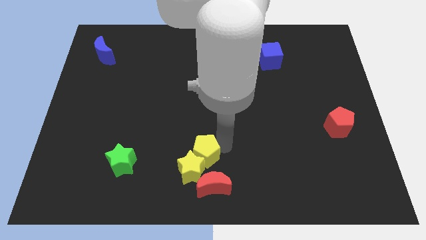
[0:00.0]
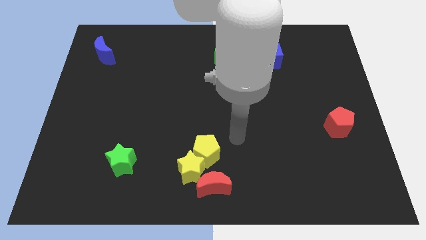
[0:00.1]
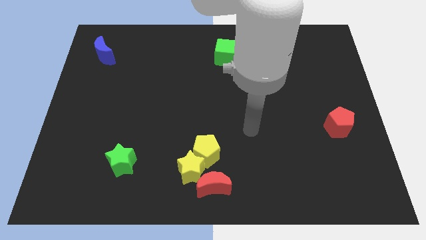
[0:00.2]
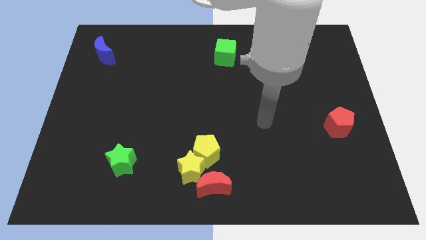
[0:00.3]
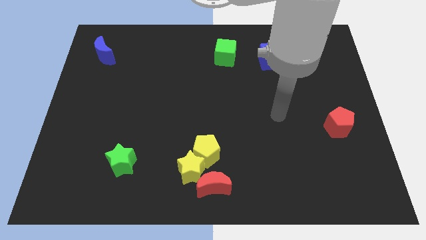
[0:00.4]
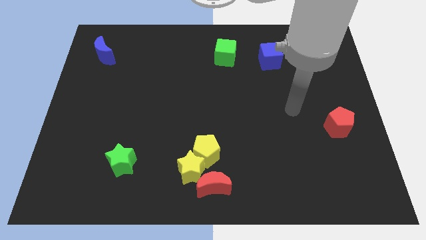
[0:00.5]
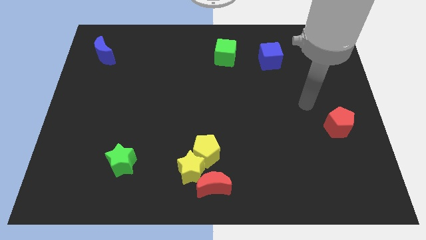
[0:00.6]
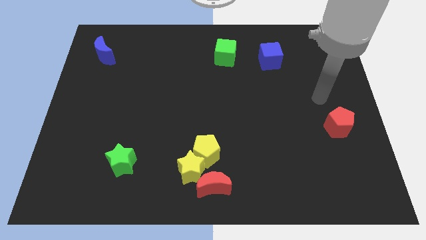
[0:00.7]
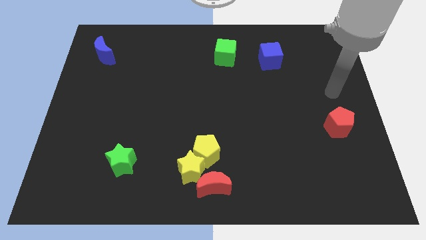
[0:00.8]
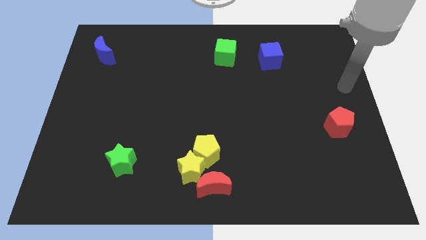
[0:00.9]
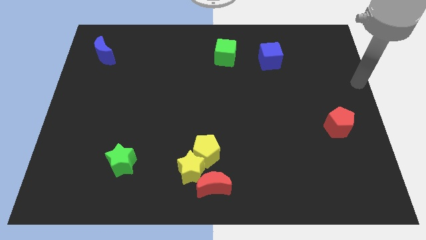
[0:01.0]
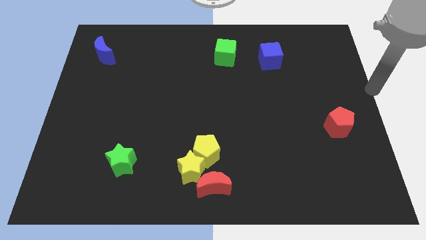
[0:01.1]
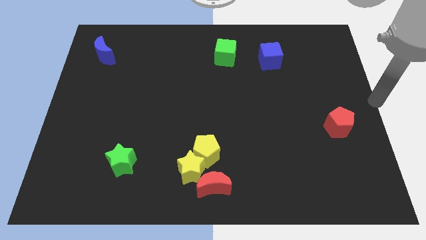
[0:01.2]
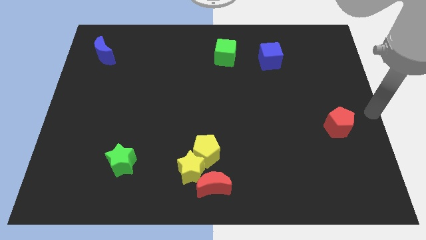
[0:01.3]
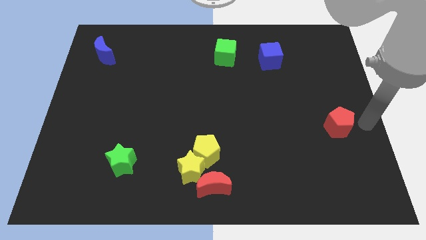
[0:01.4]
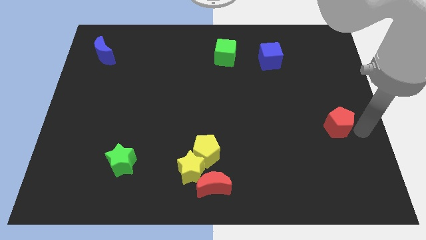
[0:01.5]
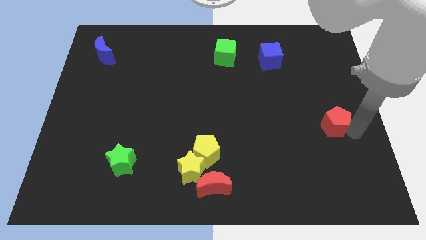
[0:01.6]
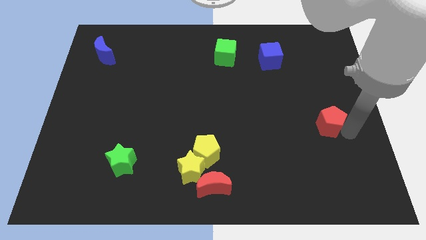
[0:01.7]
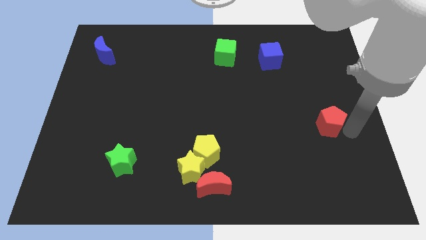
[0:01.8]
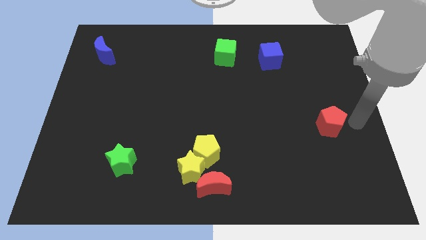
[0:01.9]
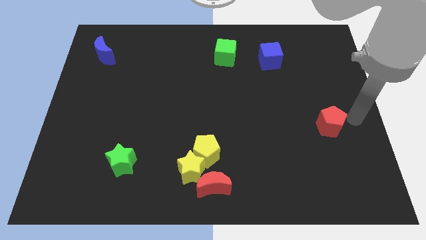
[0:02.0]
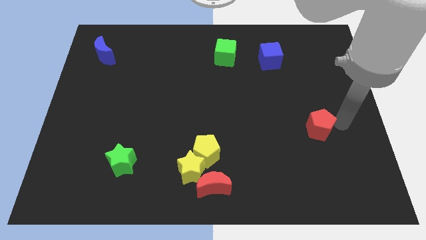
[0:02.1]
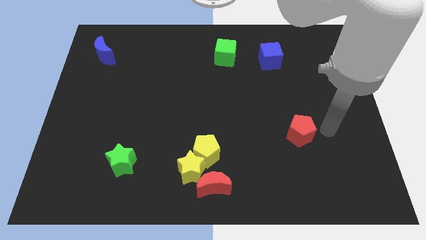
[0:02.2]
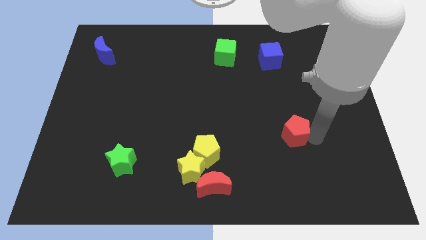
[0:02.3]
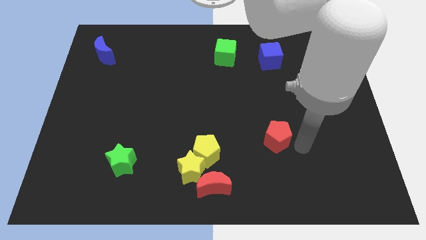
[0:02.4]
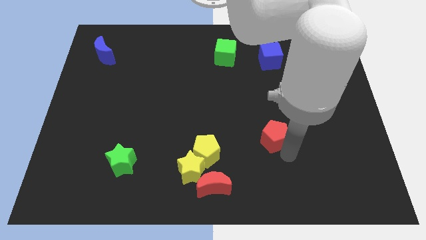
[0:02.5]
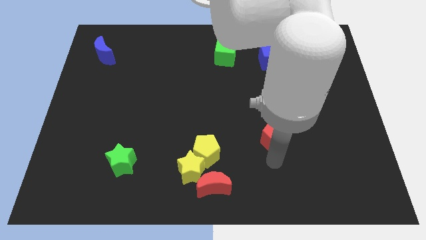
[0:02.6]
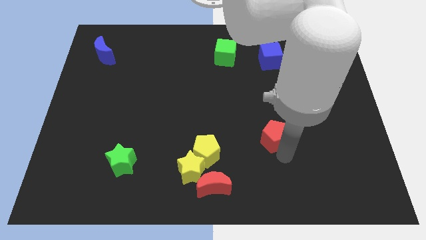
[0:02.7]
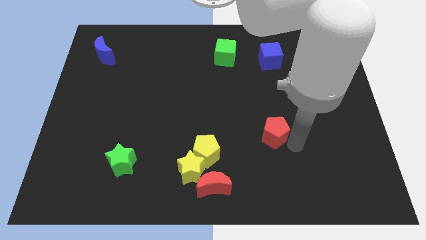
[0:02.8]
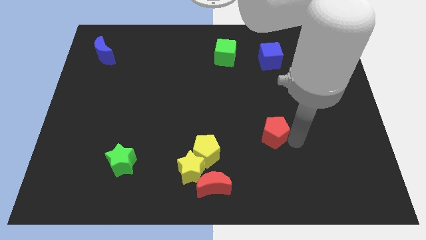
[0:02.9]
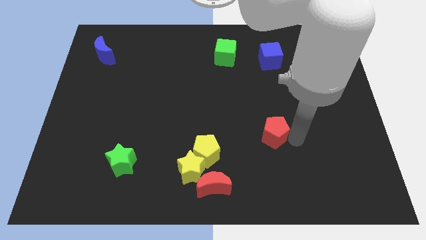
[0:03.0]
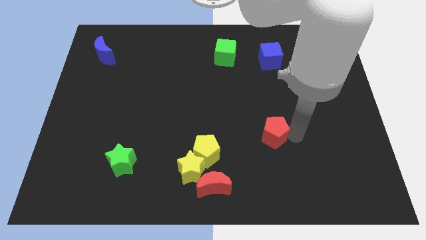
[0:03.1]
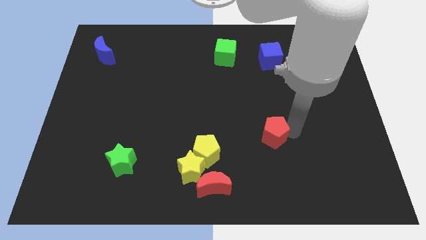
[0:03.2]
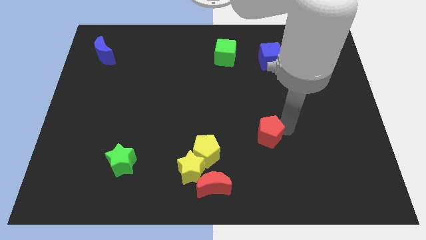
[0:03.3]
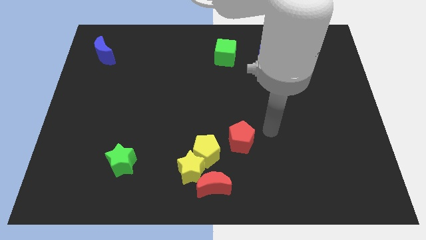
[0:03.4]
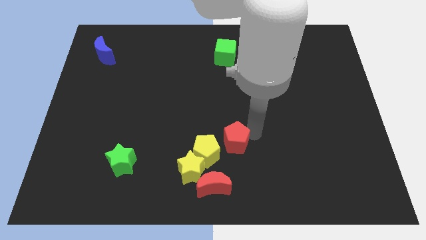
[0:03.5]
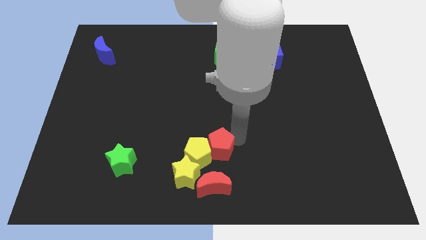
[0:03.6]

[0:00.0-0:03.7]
move the red pentagon close to the yellow pentagon

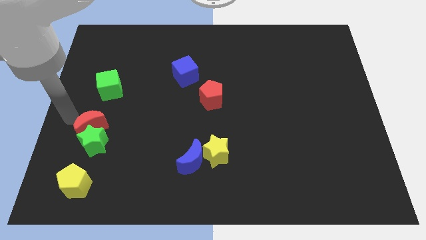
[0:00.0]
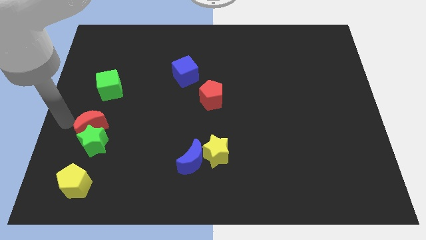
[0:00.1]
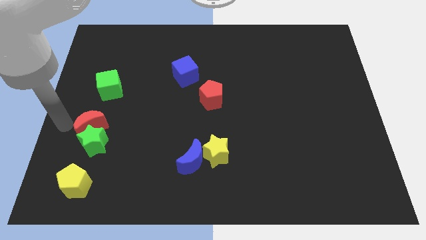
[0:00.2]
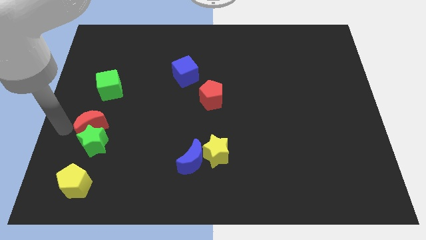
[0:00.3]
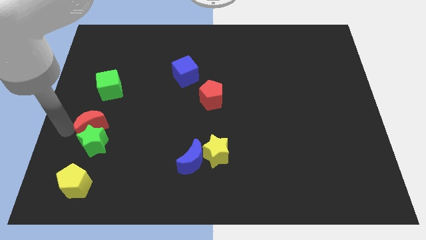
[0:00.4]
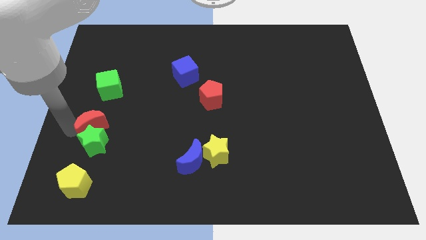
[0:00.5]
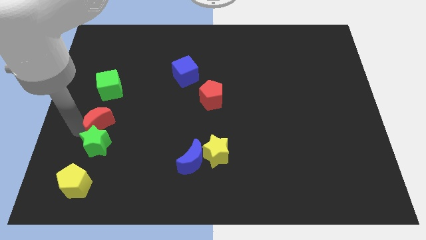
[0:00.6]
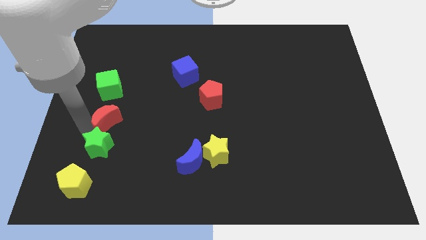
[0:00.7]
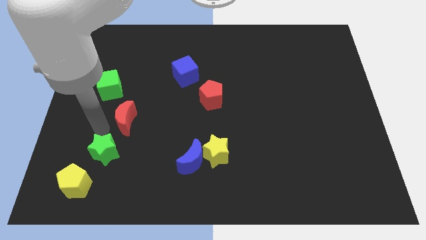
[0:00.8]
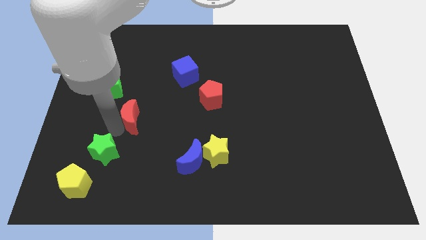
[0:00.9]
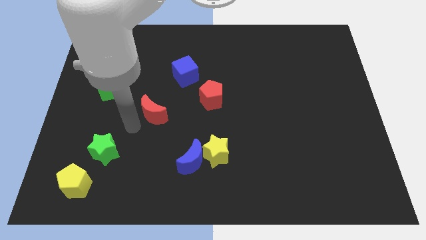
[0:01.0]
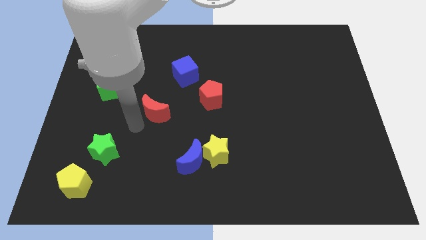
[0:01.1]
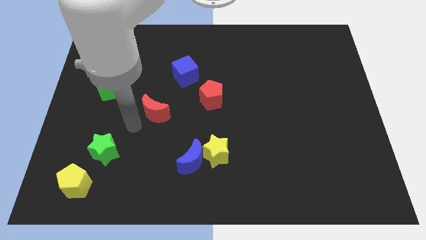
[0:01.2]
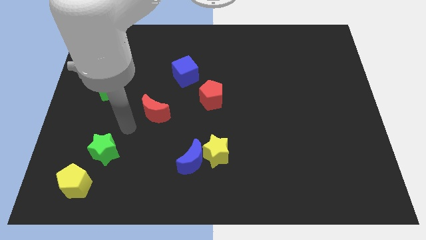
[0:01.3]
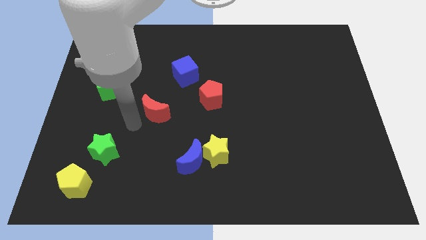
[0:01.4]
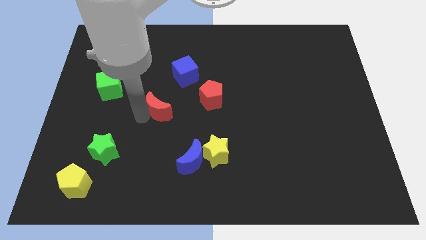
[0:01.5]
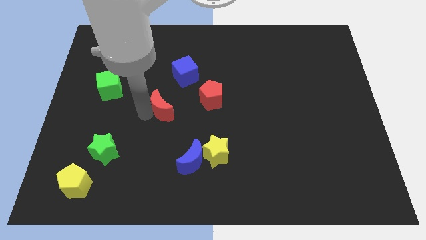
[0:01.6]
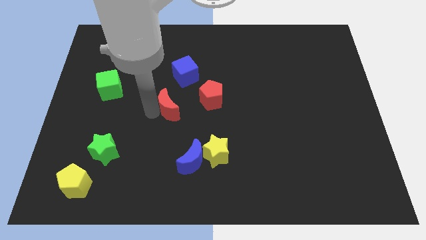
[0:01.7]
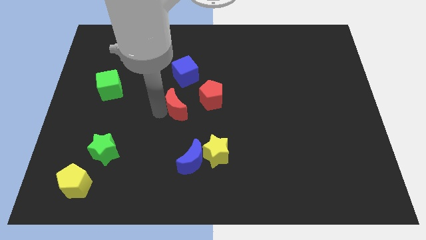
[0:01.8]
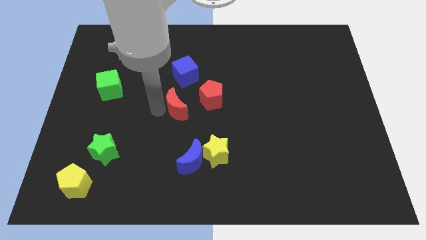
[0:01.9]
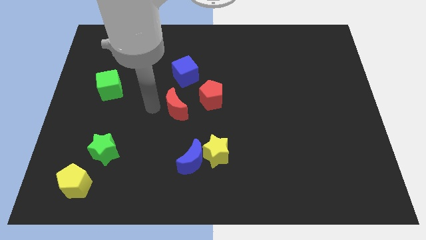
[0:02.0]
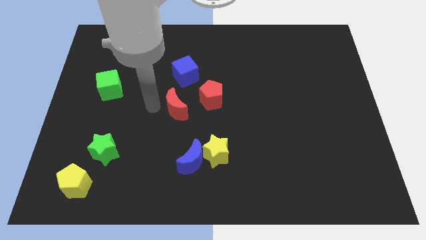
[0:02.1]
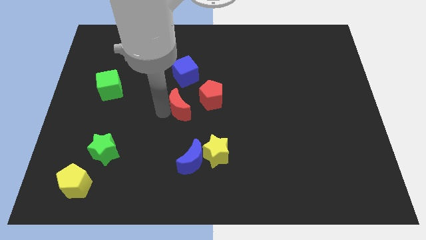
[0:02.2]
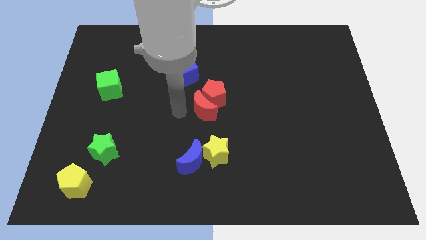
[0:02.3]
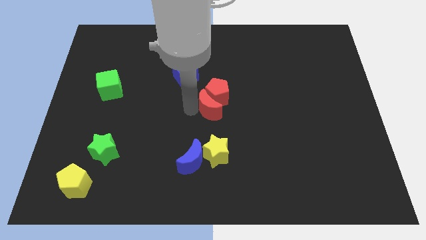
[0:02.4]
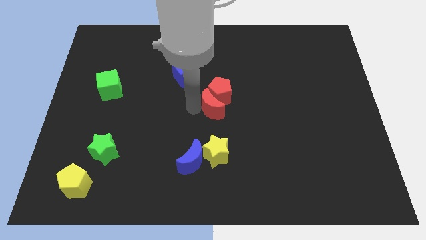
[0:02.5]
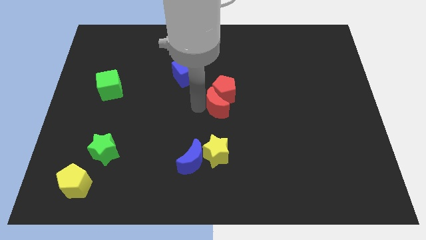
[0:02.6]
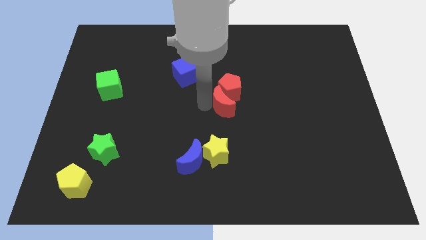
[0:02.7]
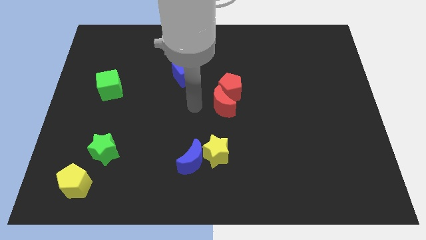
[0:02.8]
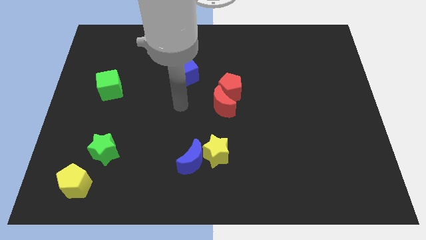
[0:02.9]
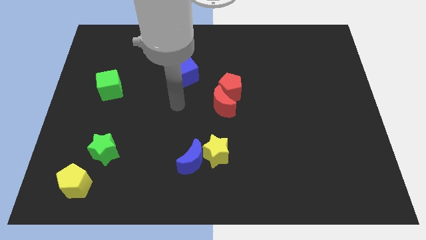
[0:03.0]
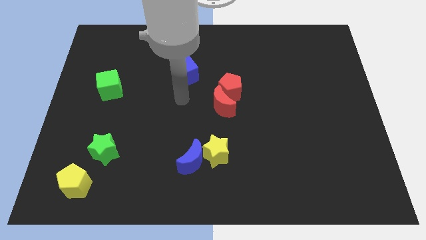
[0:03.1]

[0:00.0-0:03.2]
put both the red blocks at the center of the board

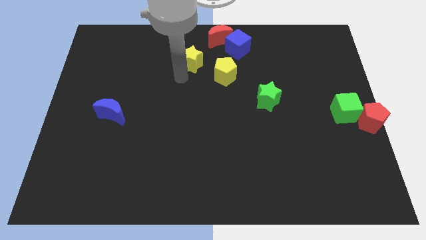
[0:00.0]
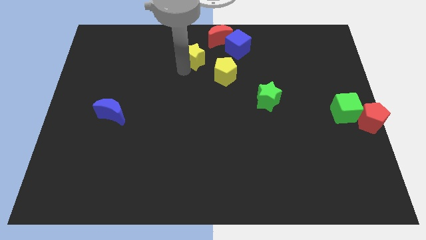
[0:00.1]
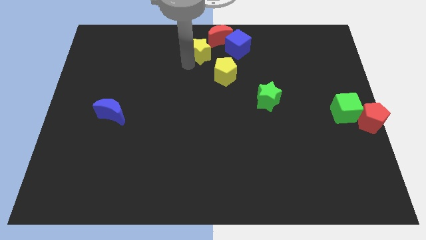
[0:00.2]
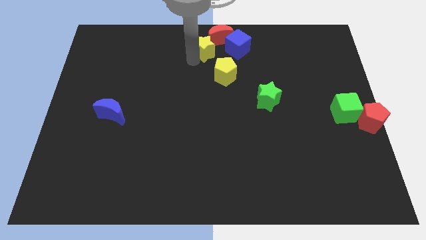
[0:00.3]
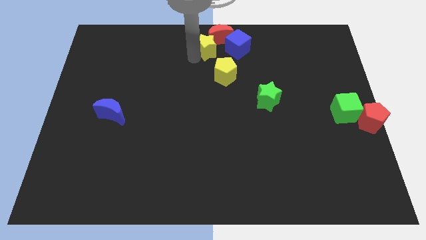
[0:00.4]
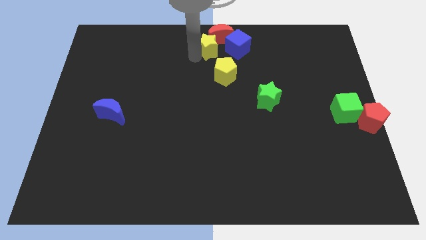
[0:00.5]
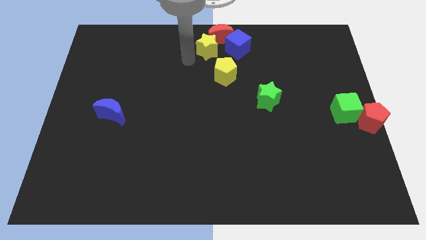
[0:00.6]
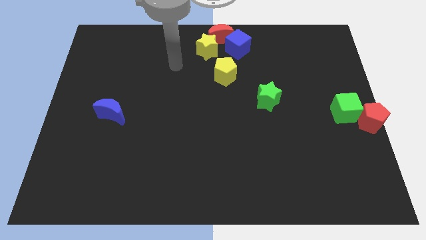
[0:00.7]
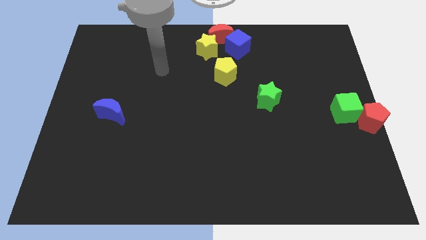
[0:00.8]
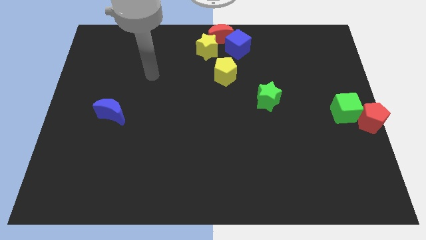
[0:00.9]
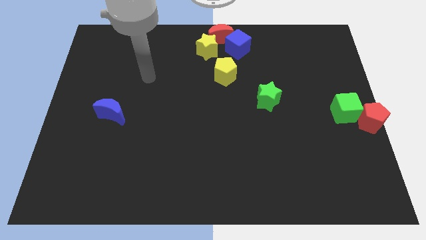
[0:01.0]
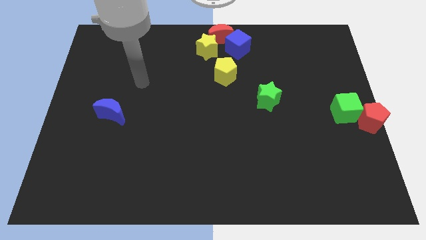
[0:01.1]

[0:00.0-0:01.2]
push the yellow star close to the red crescent

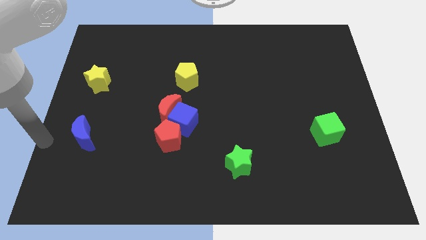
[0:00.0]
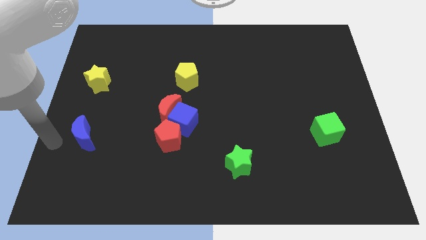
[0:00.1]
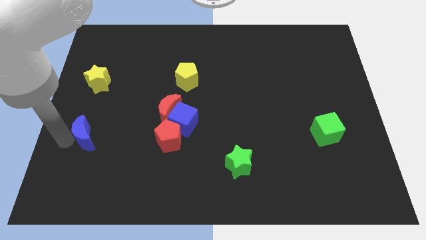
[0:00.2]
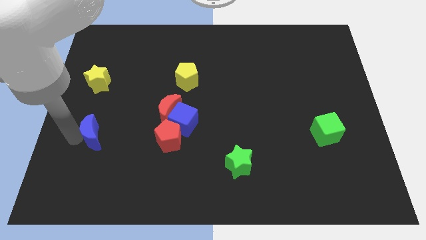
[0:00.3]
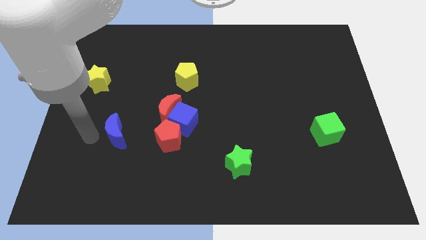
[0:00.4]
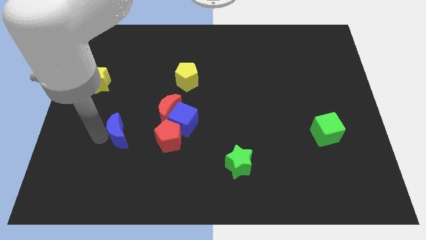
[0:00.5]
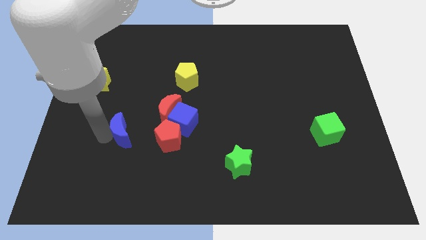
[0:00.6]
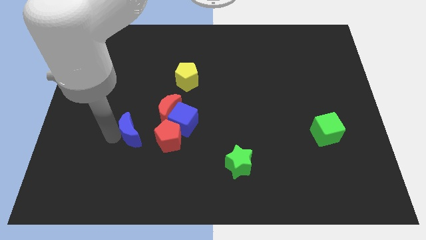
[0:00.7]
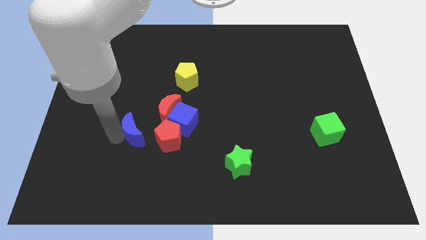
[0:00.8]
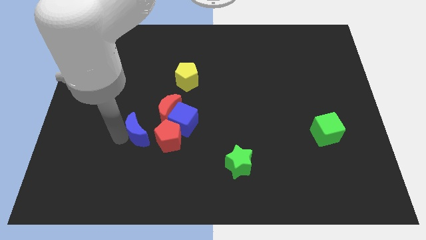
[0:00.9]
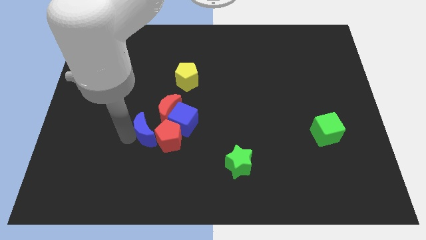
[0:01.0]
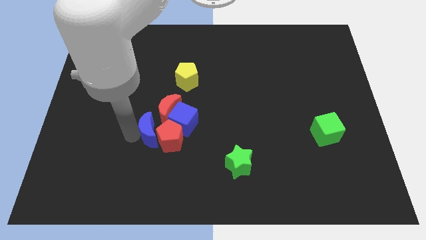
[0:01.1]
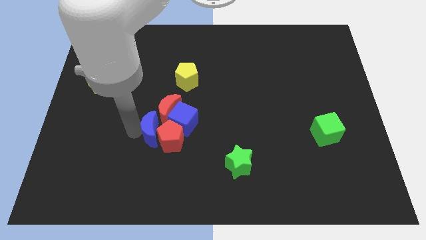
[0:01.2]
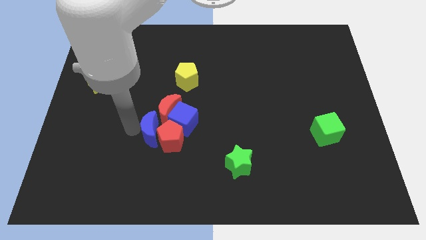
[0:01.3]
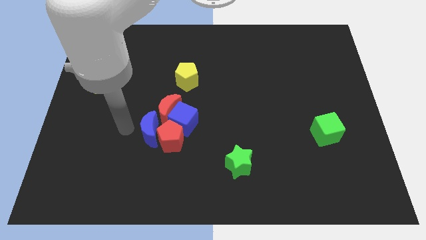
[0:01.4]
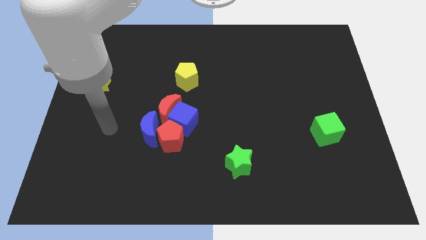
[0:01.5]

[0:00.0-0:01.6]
move the blue crescent towards the red pentagon
